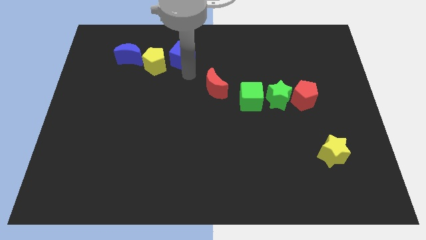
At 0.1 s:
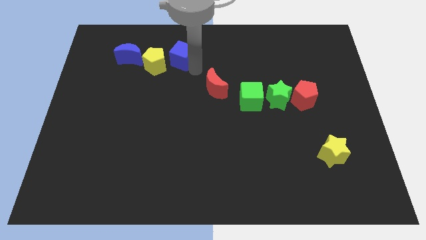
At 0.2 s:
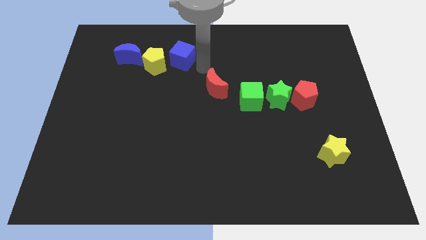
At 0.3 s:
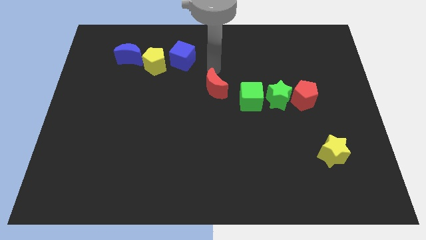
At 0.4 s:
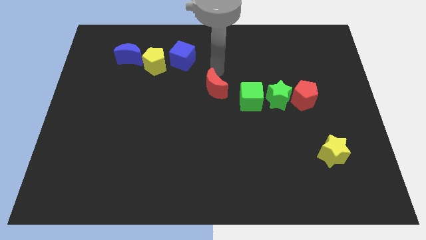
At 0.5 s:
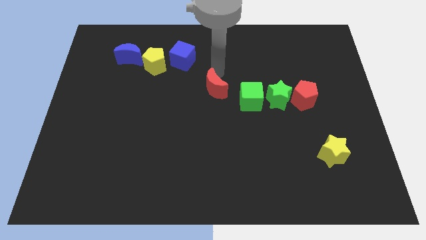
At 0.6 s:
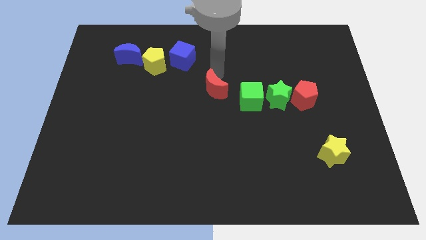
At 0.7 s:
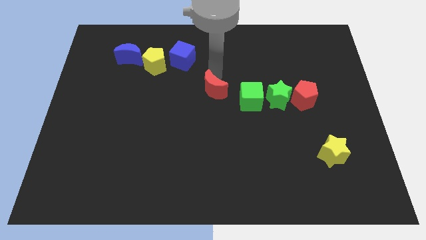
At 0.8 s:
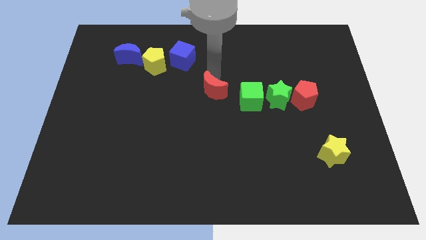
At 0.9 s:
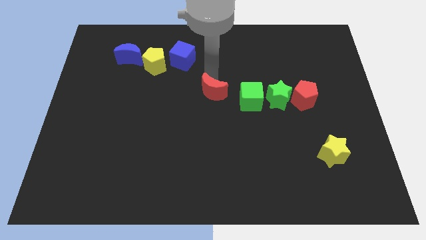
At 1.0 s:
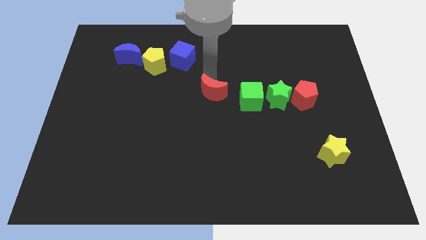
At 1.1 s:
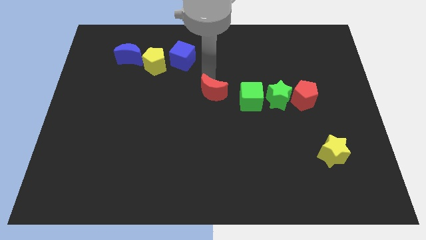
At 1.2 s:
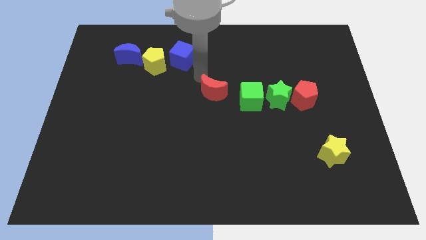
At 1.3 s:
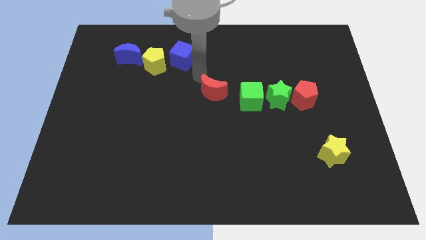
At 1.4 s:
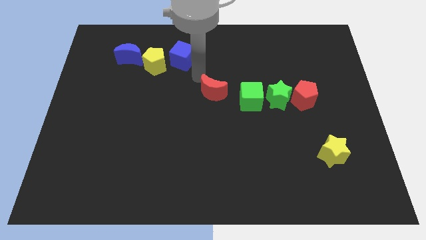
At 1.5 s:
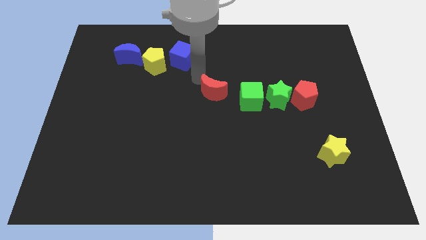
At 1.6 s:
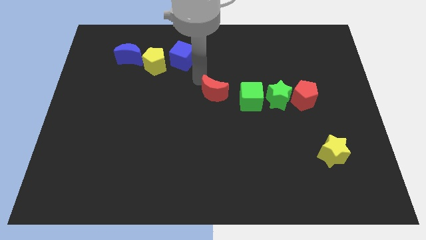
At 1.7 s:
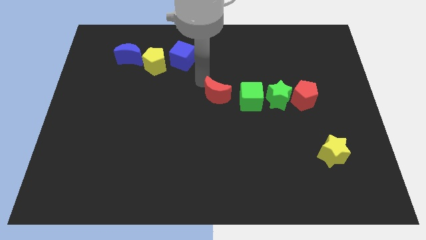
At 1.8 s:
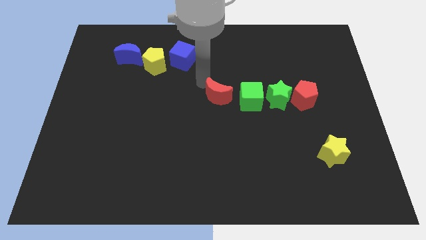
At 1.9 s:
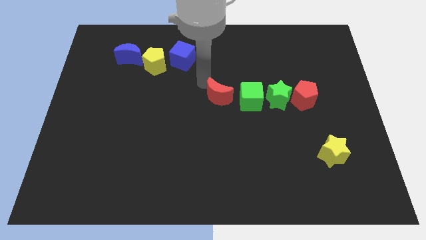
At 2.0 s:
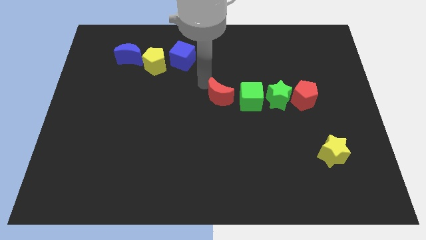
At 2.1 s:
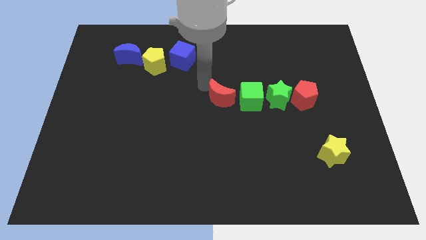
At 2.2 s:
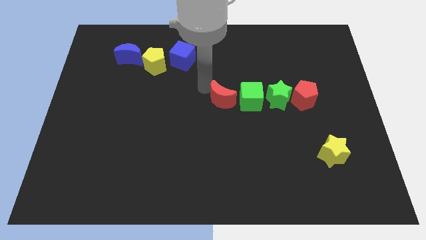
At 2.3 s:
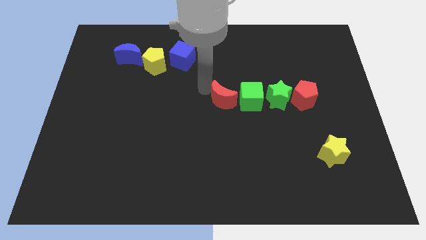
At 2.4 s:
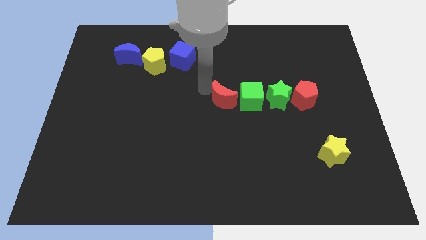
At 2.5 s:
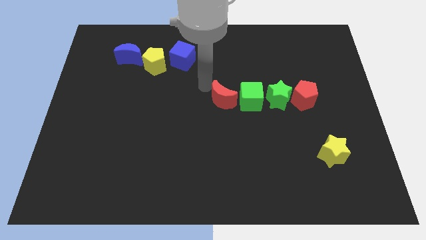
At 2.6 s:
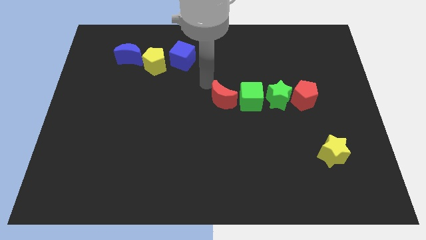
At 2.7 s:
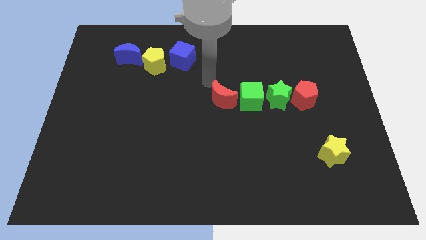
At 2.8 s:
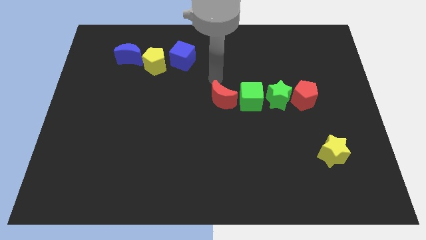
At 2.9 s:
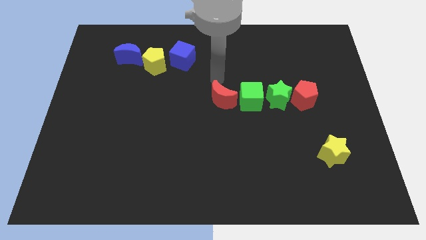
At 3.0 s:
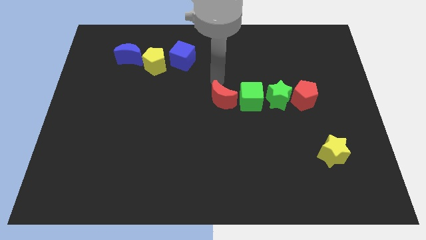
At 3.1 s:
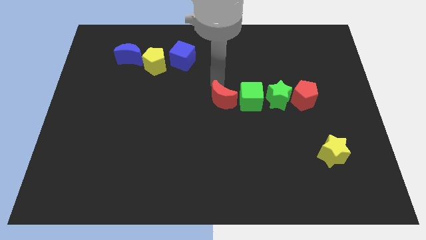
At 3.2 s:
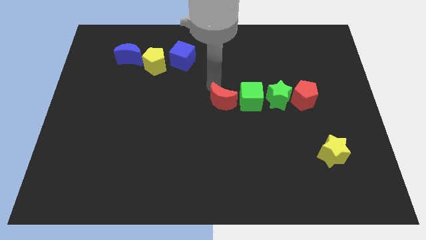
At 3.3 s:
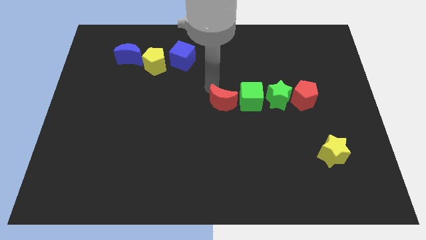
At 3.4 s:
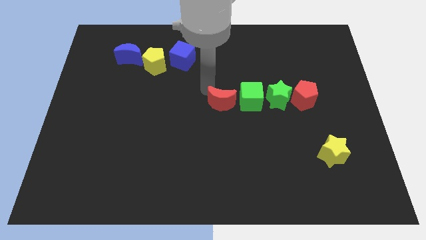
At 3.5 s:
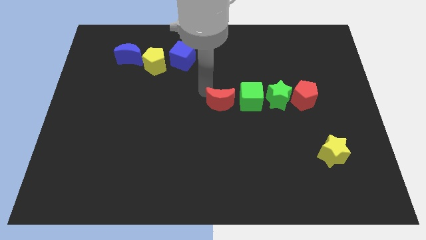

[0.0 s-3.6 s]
move red moon left beside the green cube

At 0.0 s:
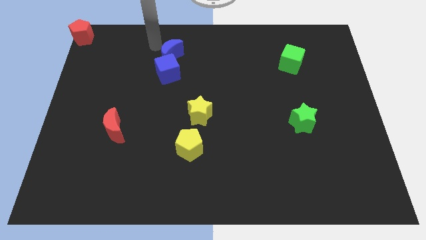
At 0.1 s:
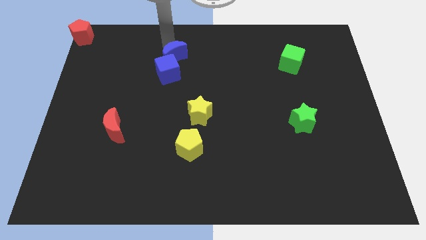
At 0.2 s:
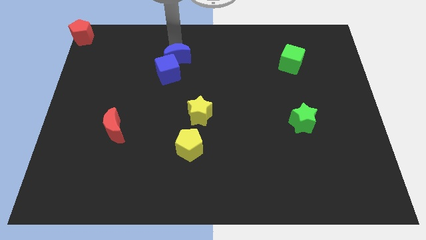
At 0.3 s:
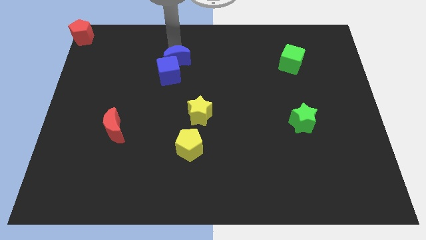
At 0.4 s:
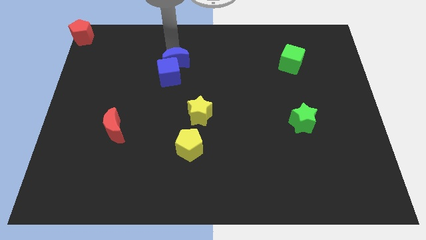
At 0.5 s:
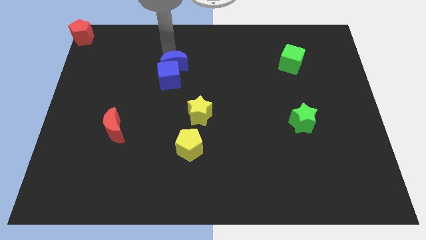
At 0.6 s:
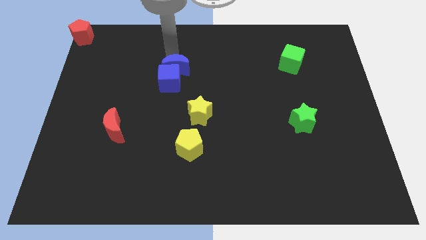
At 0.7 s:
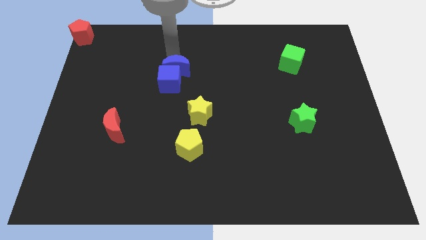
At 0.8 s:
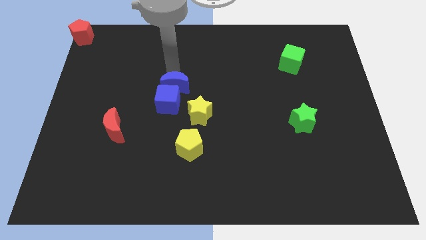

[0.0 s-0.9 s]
push the blue cube with blue moon towards the center of the board

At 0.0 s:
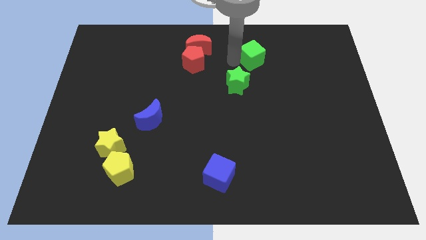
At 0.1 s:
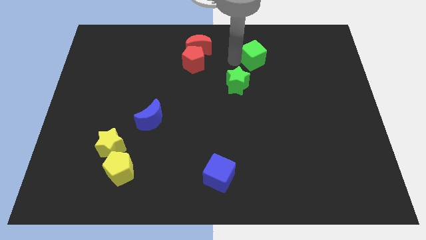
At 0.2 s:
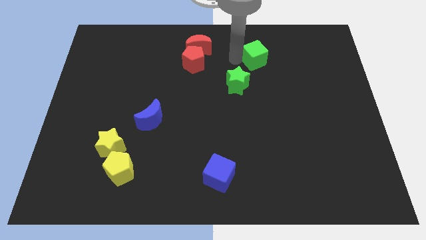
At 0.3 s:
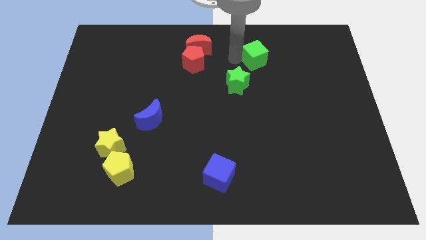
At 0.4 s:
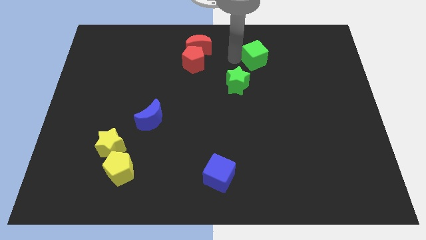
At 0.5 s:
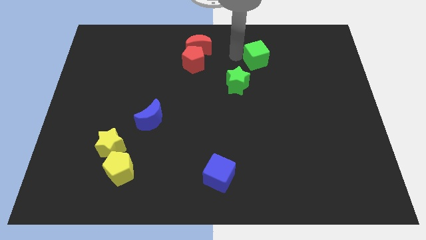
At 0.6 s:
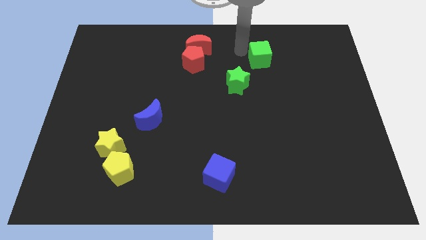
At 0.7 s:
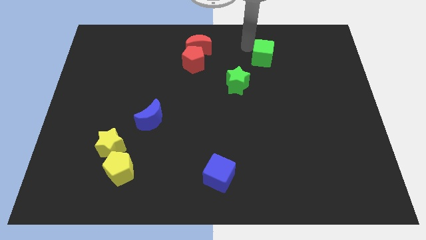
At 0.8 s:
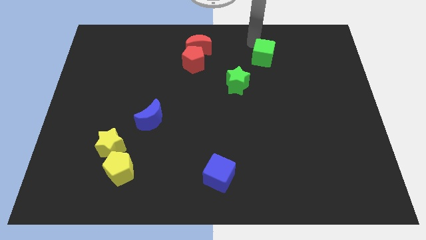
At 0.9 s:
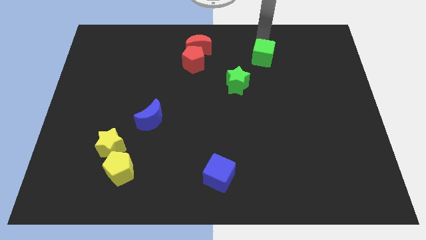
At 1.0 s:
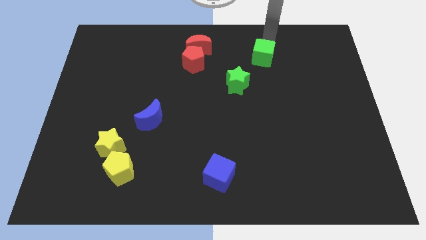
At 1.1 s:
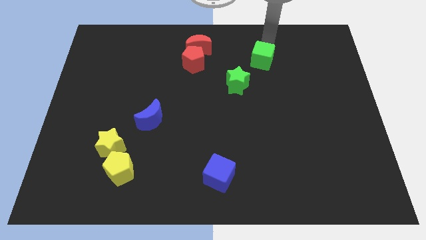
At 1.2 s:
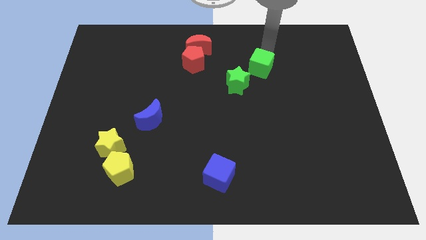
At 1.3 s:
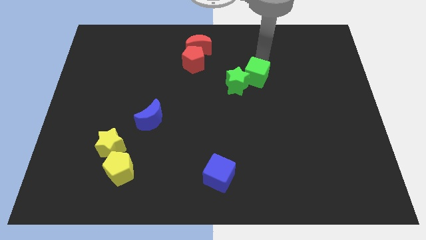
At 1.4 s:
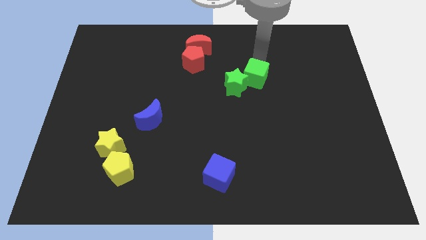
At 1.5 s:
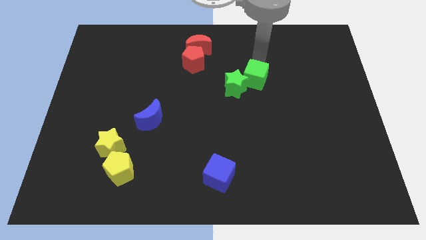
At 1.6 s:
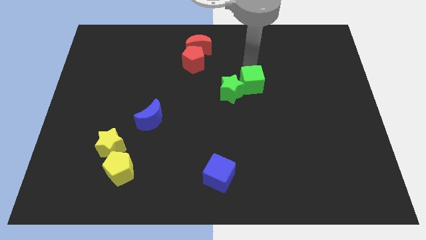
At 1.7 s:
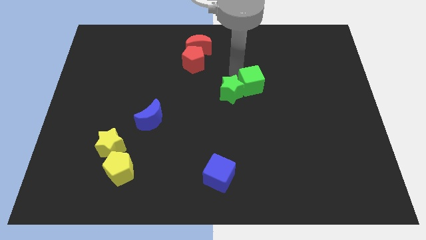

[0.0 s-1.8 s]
push the green cube into the green star

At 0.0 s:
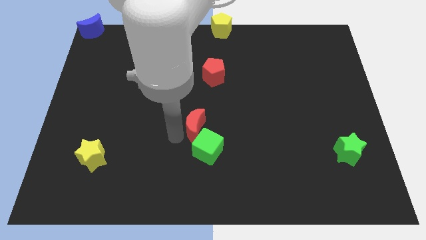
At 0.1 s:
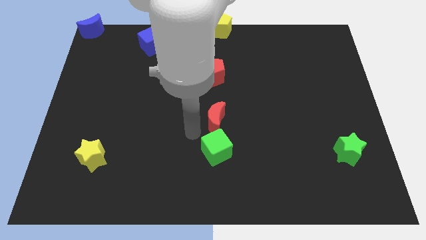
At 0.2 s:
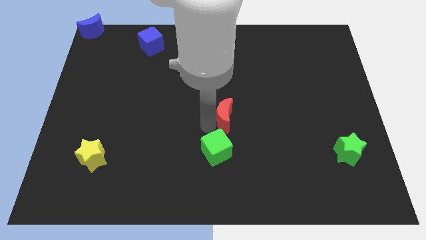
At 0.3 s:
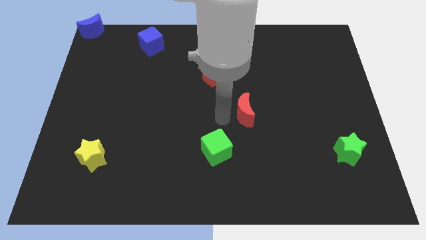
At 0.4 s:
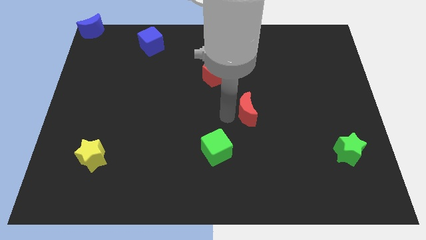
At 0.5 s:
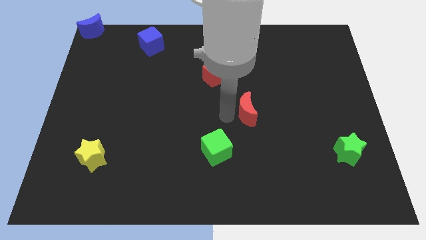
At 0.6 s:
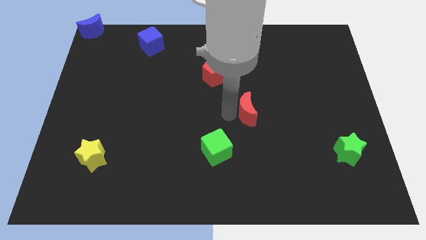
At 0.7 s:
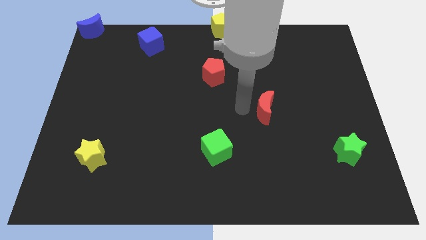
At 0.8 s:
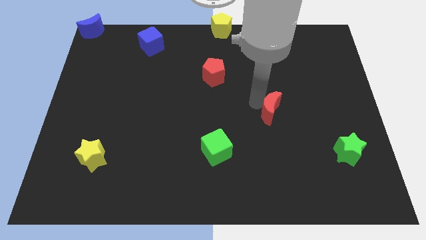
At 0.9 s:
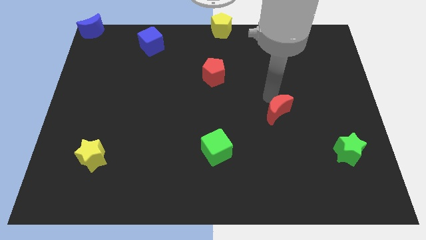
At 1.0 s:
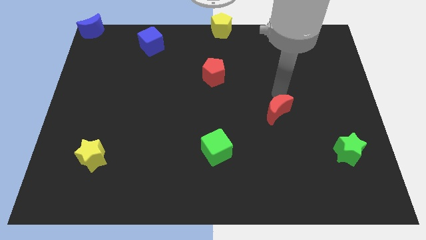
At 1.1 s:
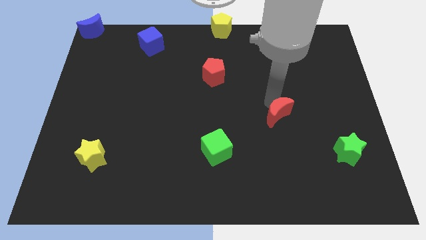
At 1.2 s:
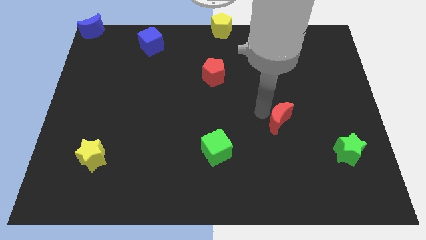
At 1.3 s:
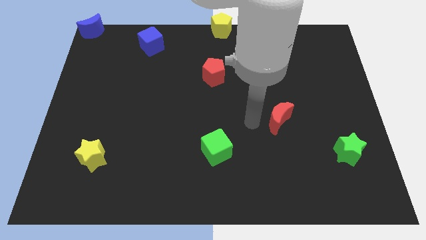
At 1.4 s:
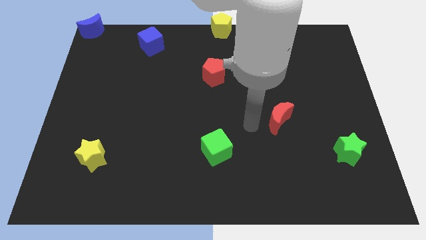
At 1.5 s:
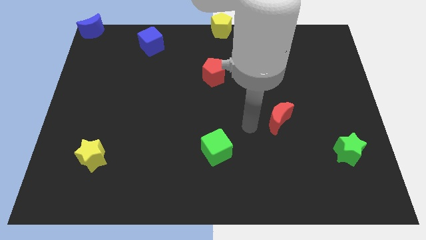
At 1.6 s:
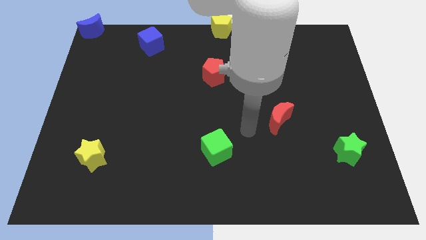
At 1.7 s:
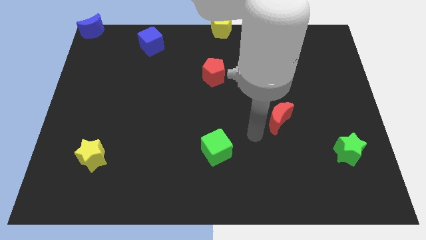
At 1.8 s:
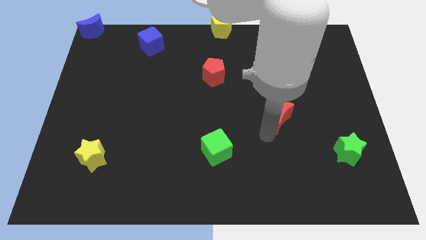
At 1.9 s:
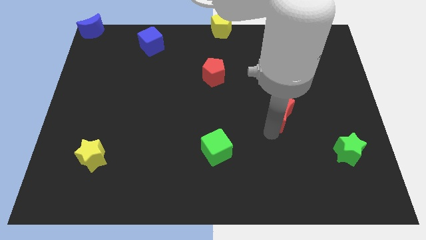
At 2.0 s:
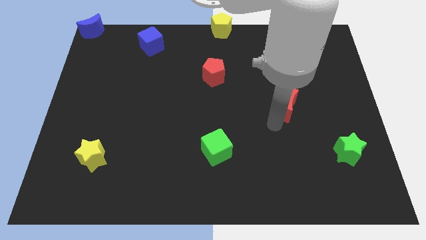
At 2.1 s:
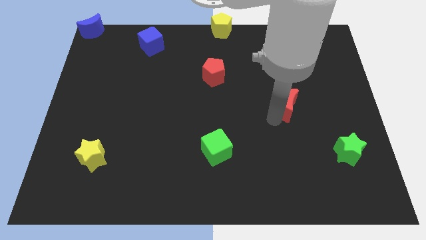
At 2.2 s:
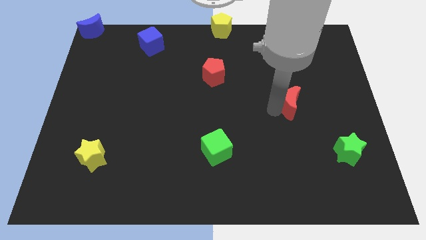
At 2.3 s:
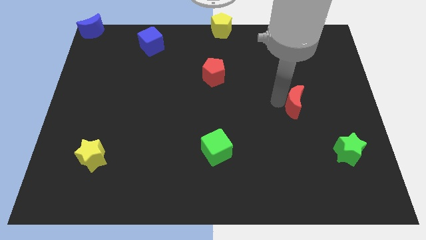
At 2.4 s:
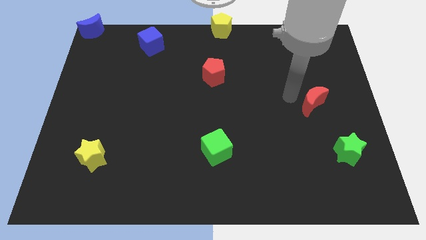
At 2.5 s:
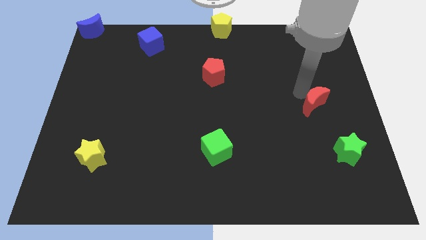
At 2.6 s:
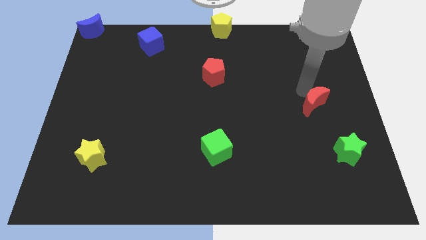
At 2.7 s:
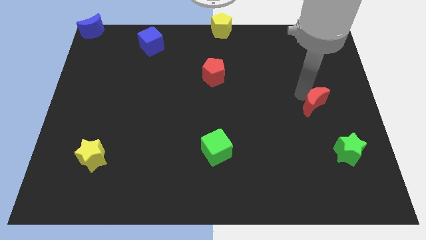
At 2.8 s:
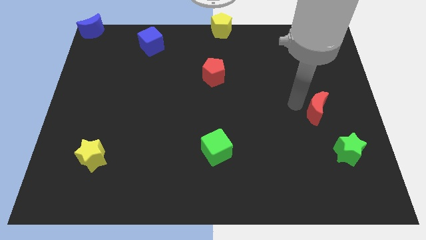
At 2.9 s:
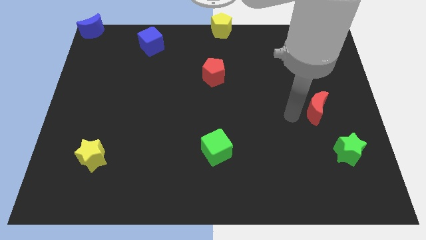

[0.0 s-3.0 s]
push red crescent slightly towards the right side
